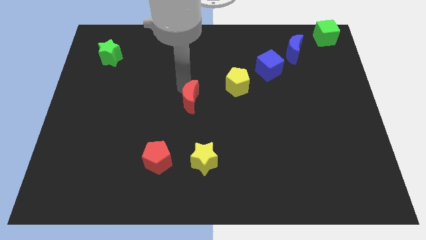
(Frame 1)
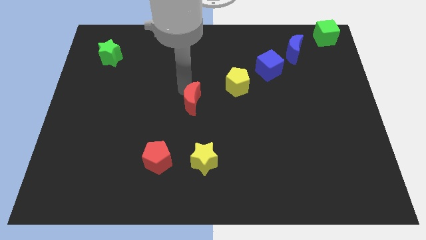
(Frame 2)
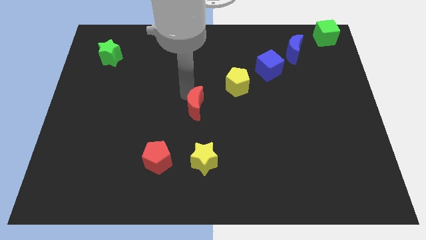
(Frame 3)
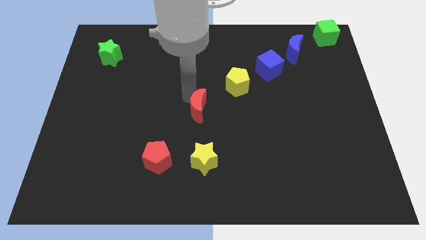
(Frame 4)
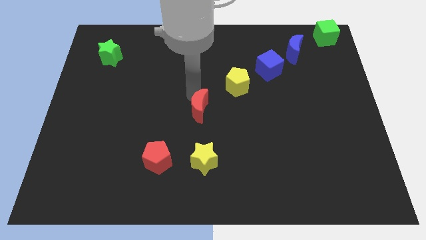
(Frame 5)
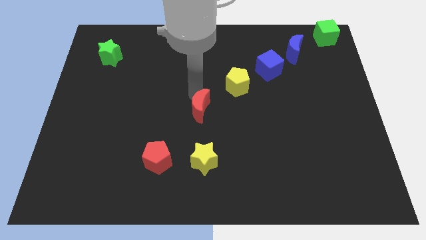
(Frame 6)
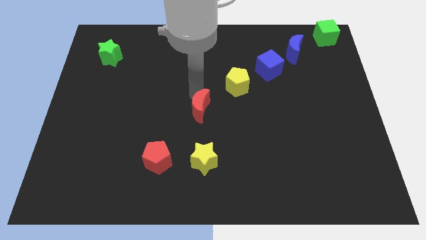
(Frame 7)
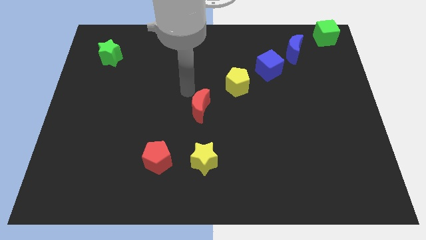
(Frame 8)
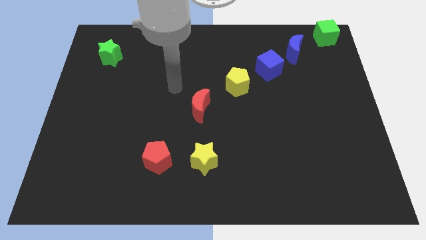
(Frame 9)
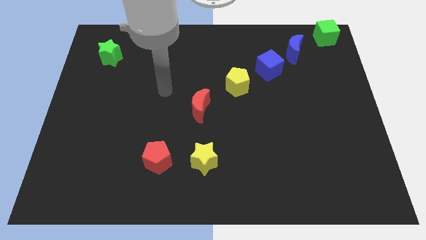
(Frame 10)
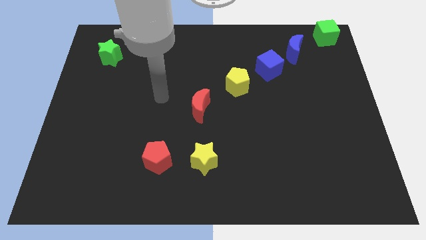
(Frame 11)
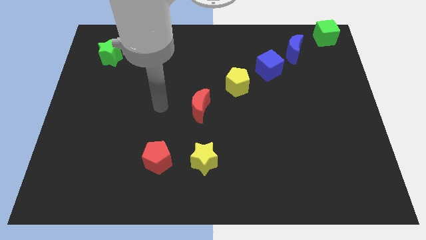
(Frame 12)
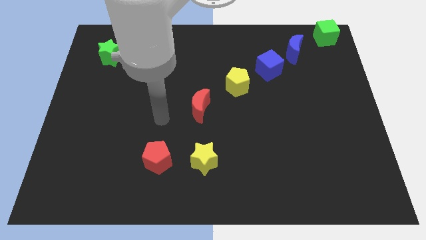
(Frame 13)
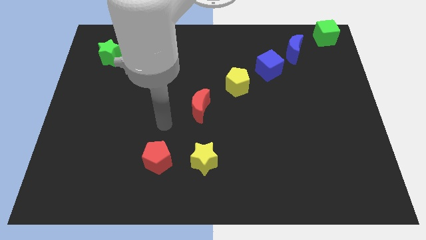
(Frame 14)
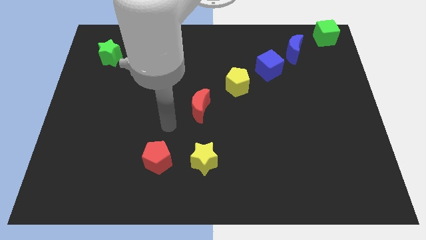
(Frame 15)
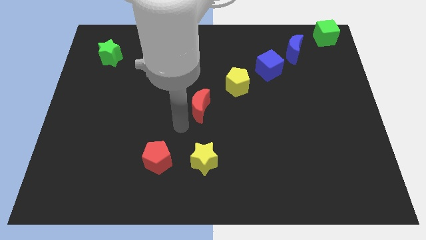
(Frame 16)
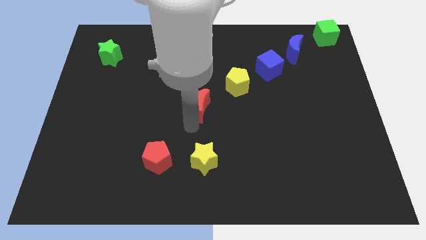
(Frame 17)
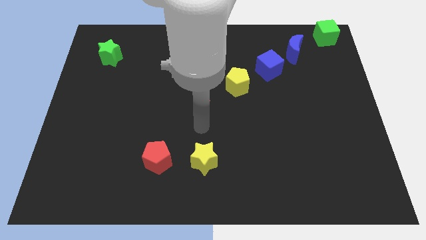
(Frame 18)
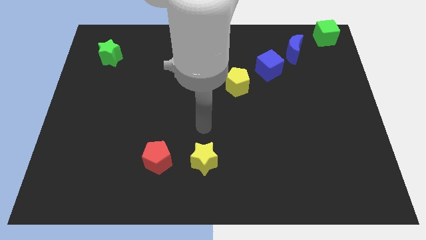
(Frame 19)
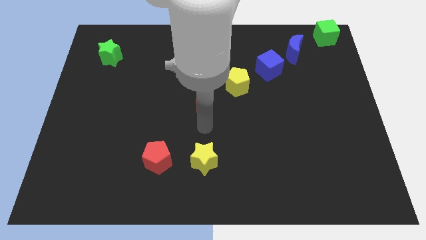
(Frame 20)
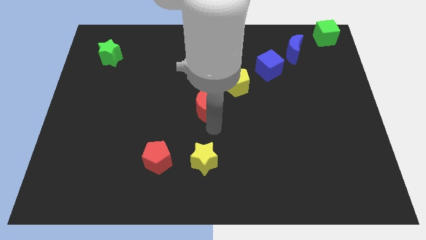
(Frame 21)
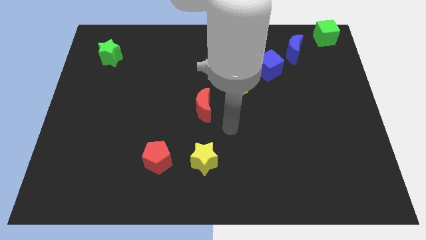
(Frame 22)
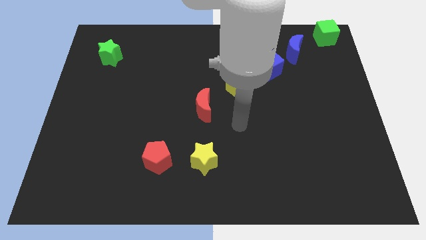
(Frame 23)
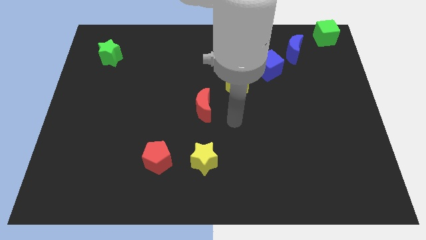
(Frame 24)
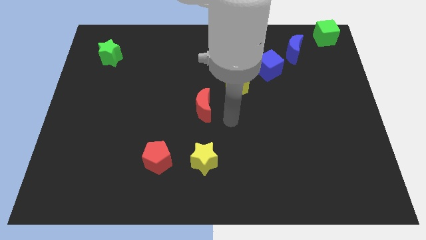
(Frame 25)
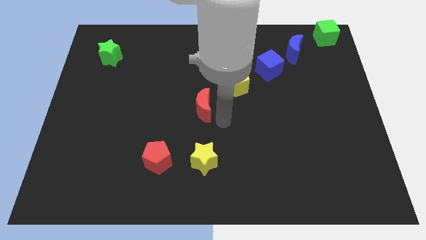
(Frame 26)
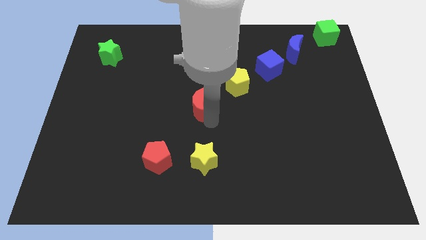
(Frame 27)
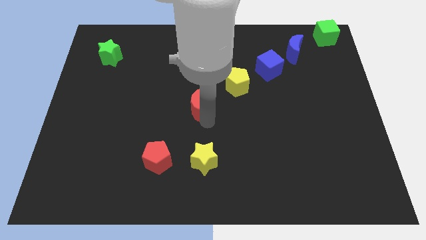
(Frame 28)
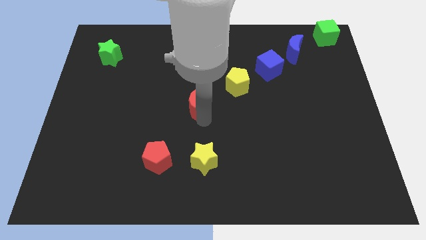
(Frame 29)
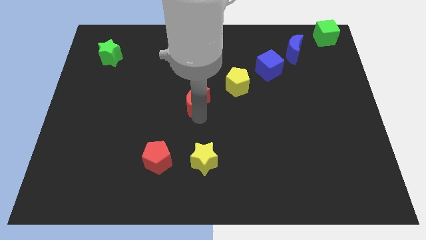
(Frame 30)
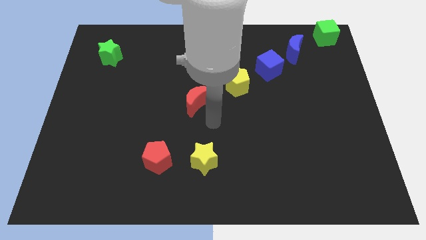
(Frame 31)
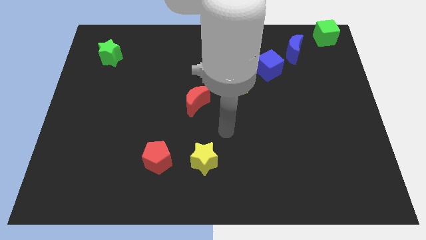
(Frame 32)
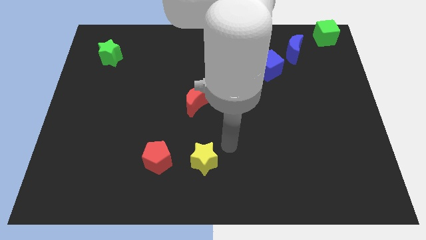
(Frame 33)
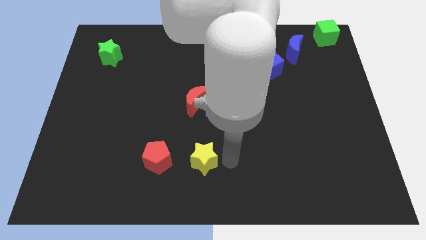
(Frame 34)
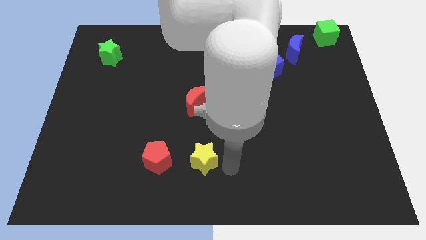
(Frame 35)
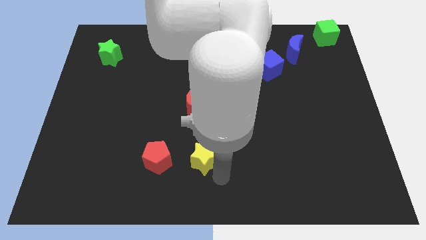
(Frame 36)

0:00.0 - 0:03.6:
adjust the red moon diagonally on the bottom left side of the yellow pentagon

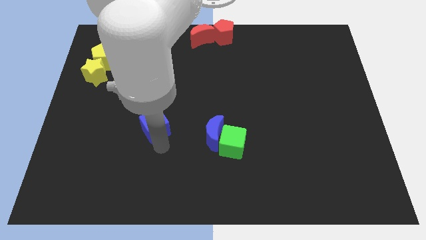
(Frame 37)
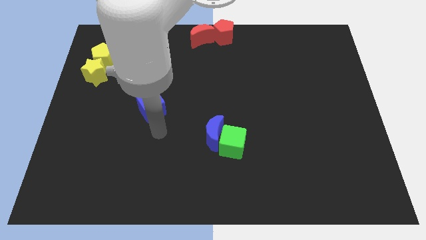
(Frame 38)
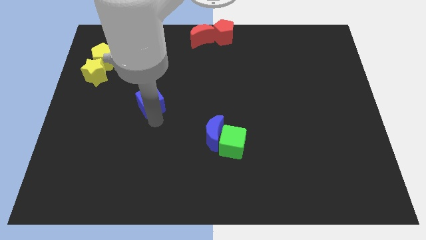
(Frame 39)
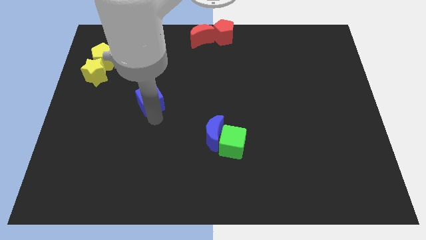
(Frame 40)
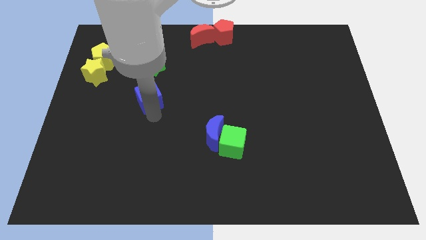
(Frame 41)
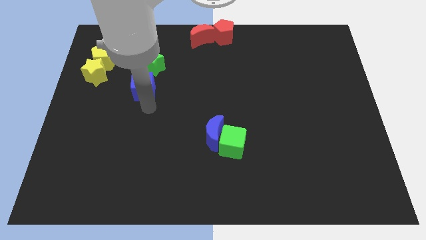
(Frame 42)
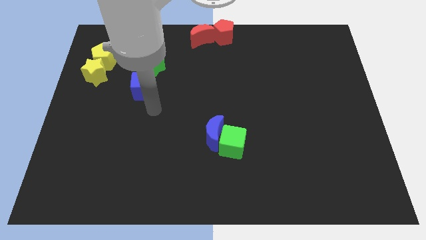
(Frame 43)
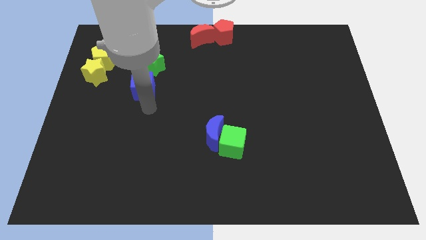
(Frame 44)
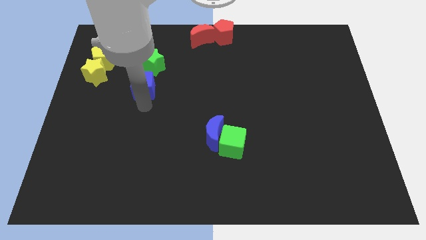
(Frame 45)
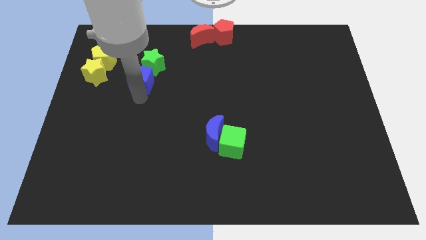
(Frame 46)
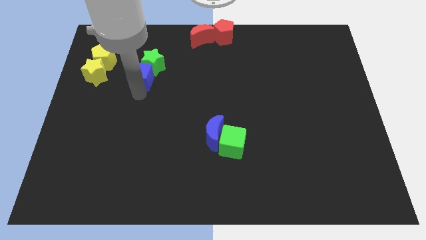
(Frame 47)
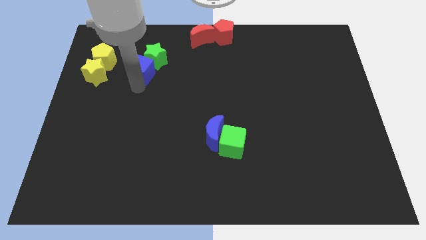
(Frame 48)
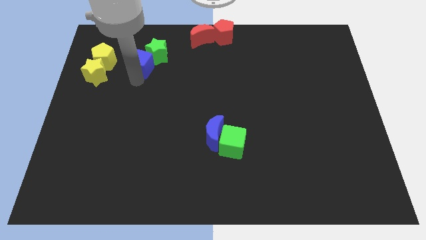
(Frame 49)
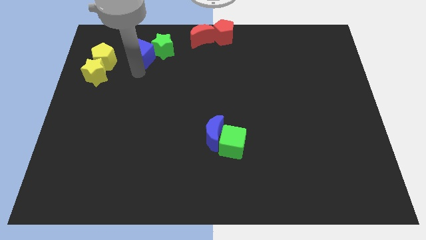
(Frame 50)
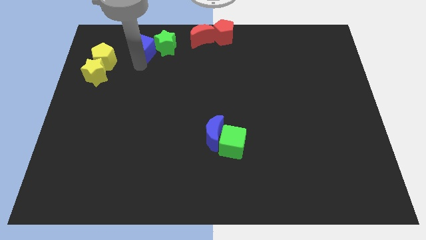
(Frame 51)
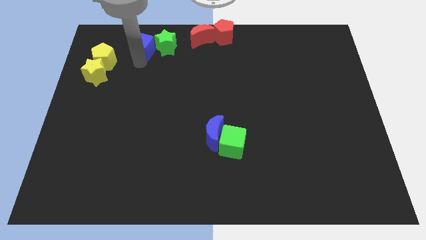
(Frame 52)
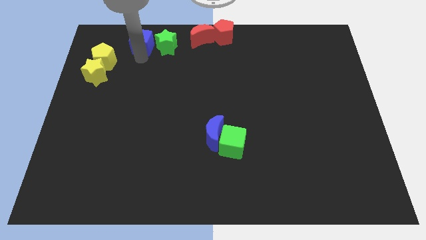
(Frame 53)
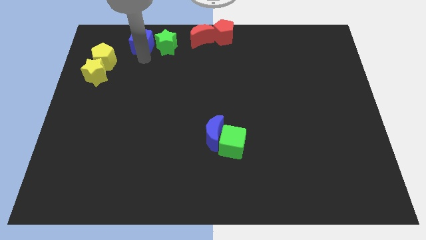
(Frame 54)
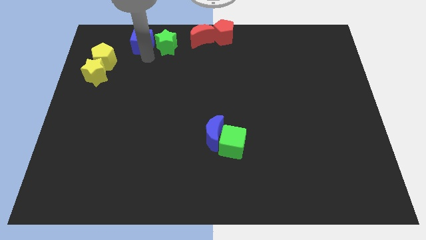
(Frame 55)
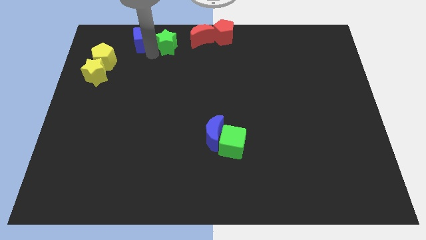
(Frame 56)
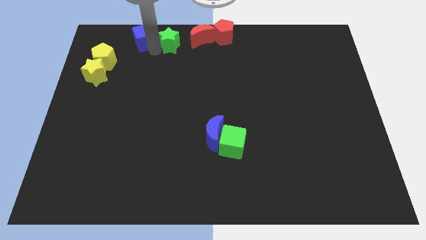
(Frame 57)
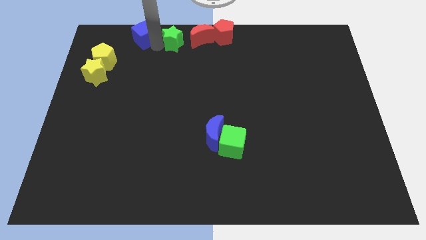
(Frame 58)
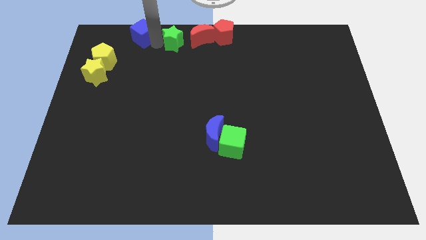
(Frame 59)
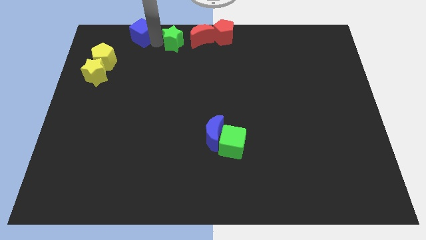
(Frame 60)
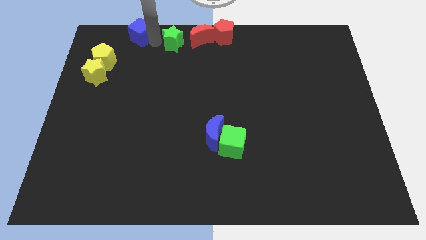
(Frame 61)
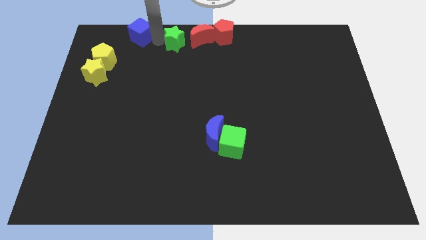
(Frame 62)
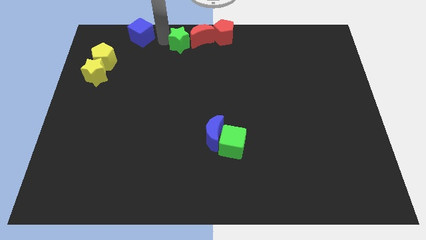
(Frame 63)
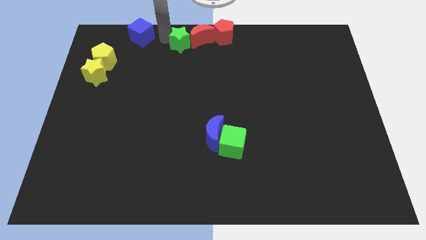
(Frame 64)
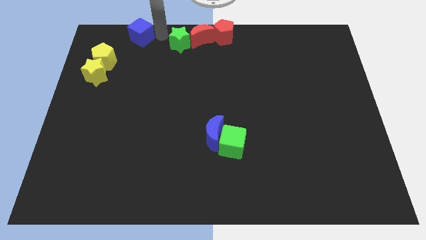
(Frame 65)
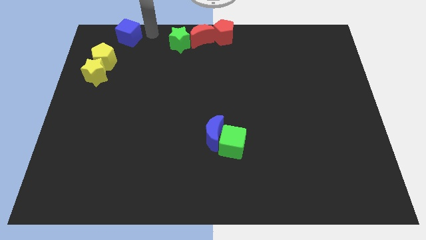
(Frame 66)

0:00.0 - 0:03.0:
push the green cube with the blue cube

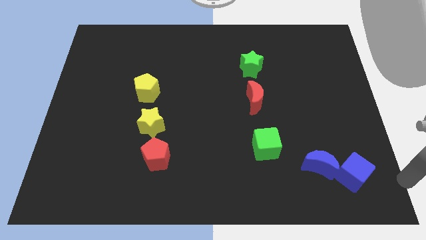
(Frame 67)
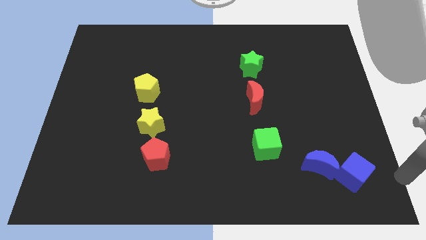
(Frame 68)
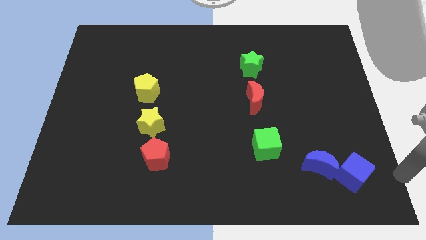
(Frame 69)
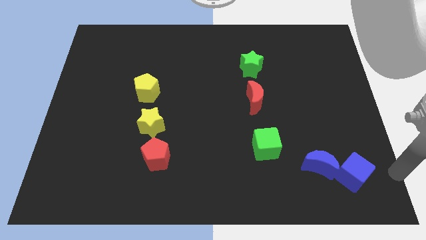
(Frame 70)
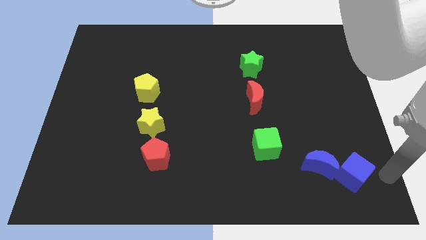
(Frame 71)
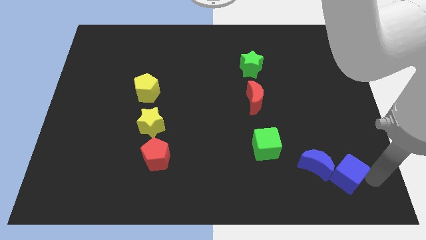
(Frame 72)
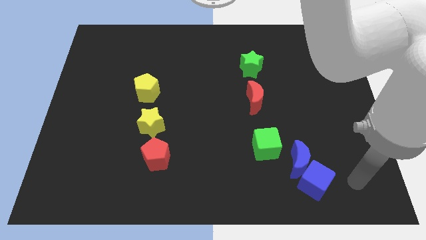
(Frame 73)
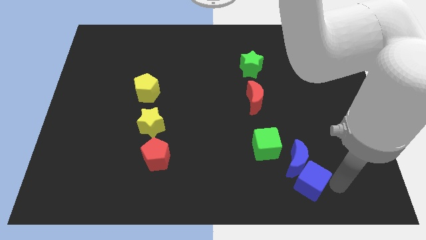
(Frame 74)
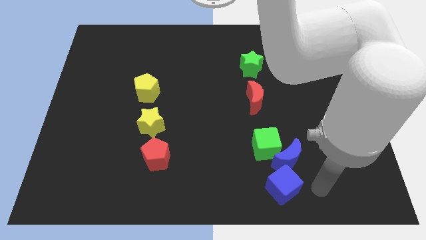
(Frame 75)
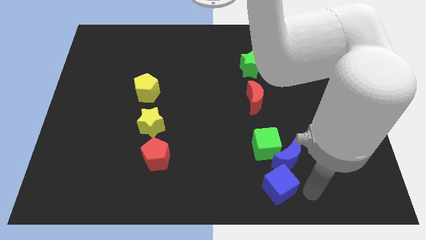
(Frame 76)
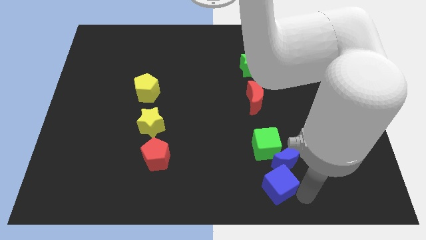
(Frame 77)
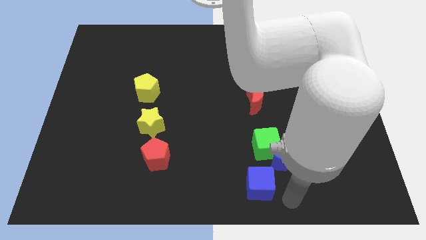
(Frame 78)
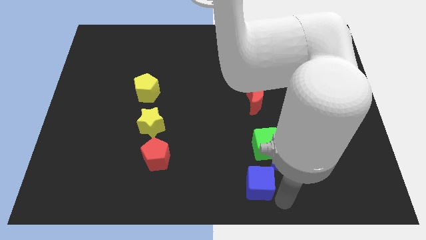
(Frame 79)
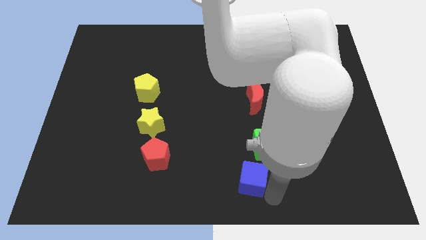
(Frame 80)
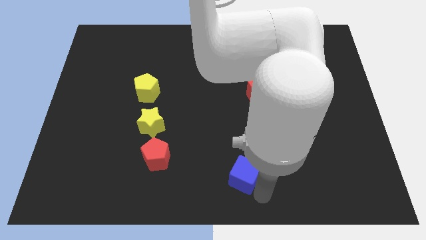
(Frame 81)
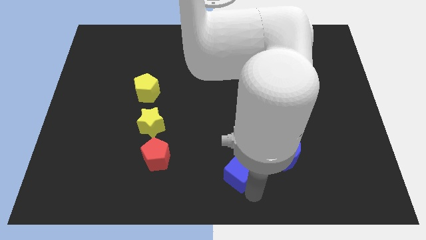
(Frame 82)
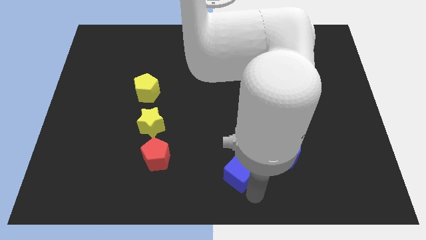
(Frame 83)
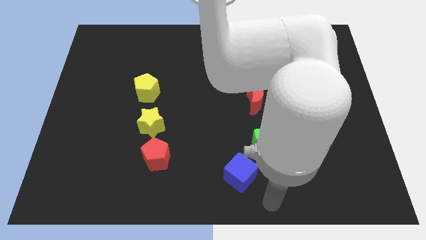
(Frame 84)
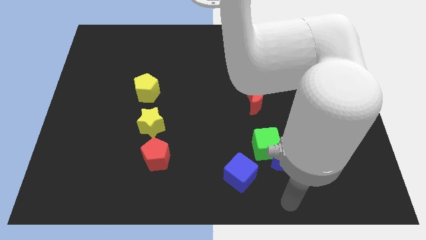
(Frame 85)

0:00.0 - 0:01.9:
place the blue cube diagonally bottom left to green cube

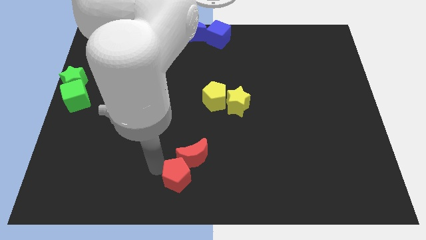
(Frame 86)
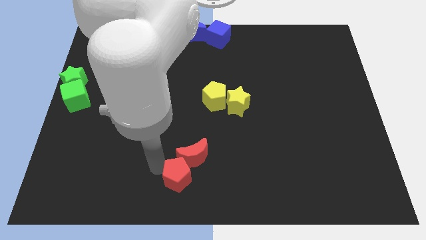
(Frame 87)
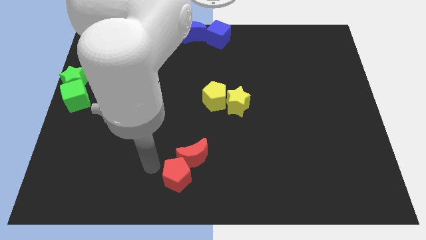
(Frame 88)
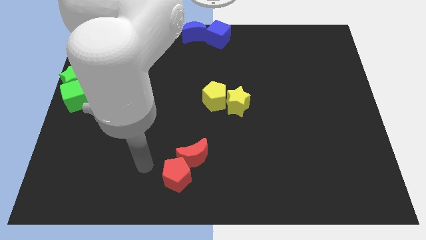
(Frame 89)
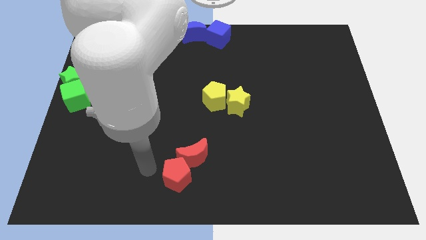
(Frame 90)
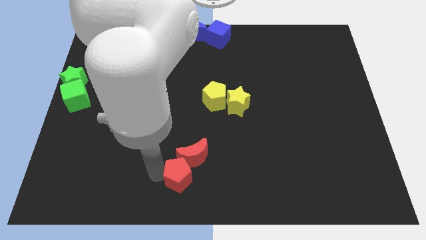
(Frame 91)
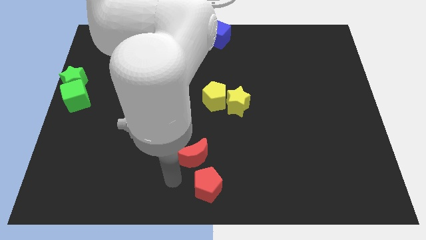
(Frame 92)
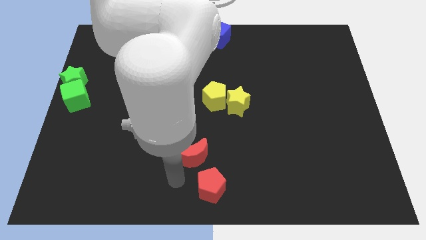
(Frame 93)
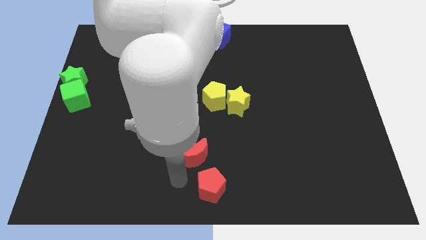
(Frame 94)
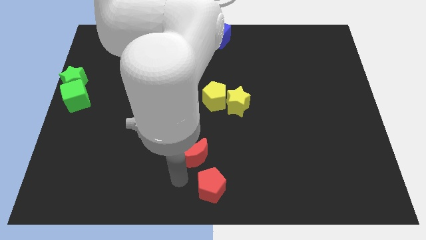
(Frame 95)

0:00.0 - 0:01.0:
move the red pentagon vertical to the red crescent
